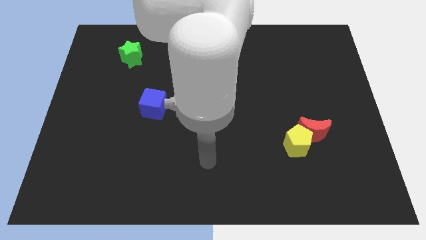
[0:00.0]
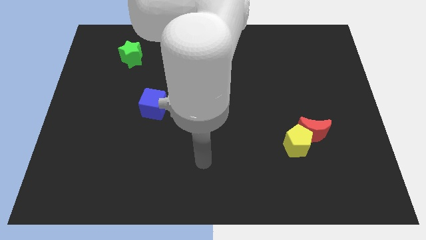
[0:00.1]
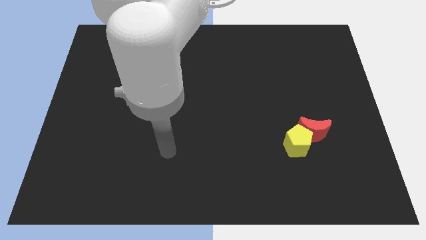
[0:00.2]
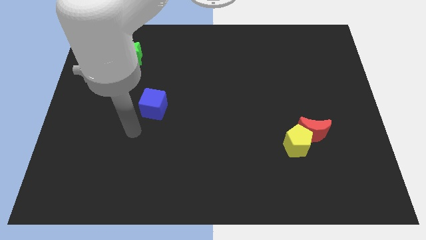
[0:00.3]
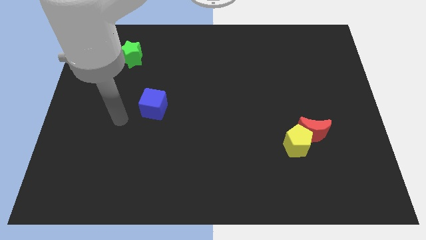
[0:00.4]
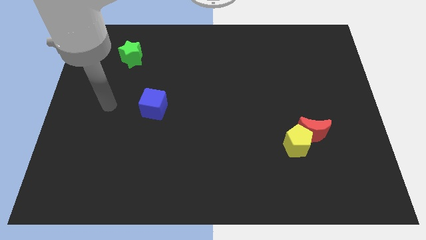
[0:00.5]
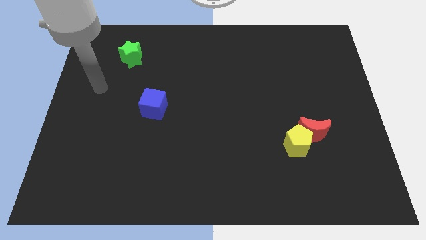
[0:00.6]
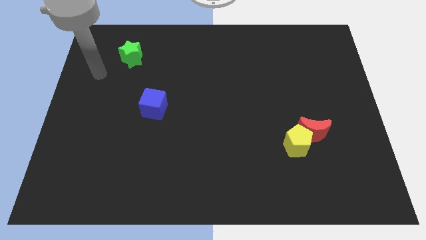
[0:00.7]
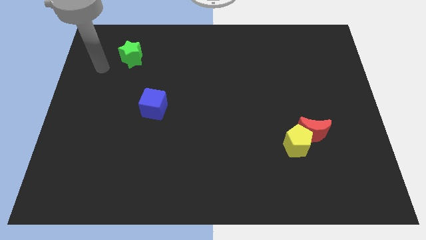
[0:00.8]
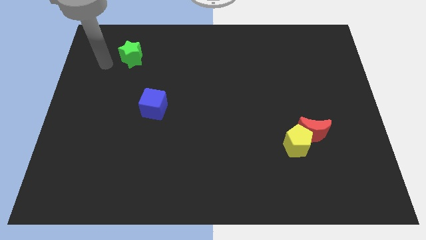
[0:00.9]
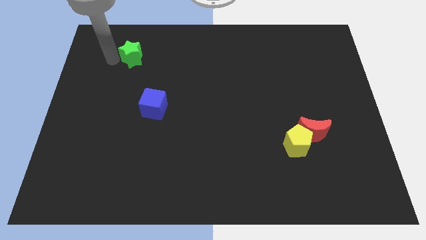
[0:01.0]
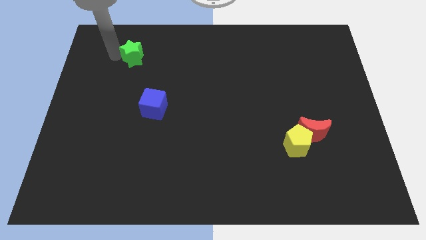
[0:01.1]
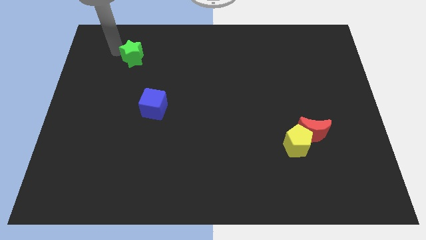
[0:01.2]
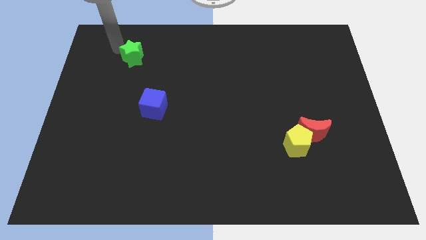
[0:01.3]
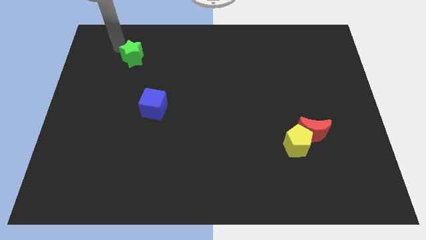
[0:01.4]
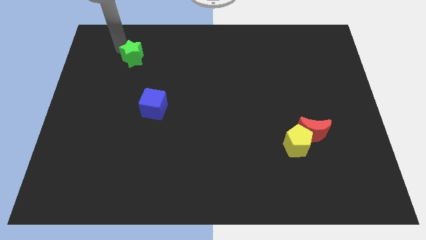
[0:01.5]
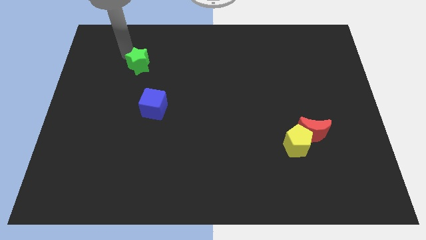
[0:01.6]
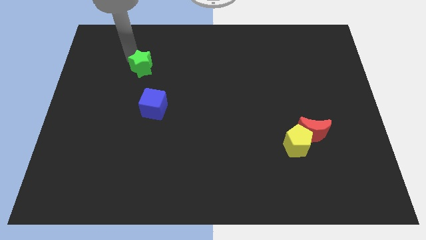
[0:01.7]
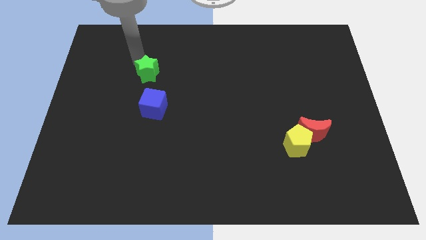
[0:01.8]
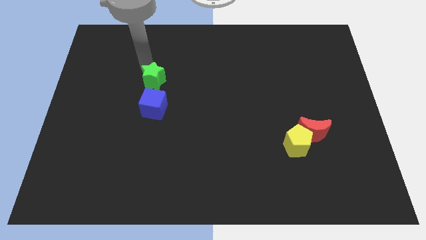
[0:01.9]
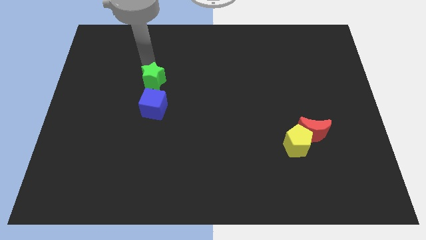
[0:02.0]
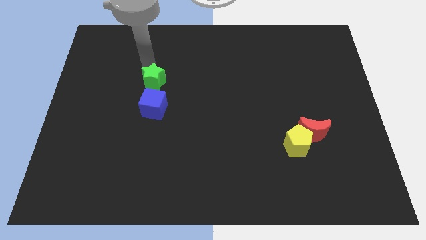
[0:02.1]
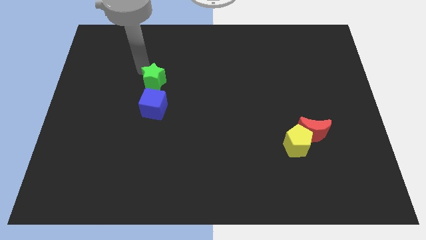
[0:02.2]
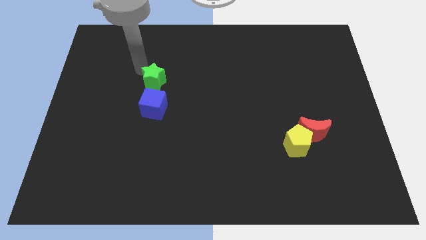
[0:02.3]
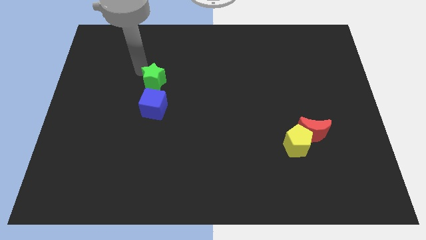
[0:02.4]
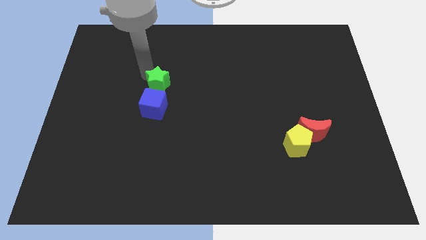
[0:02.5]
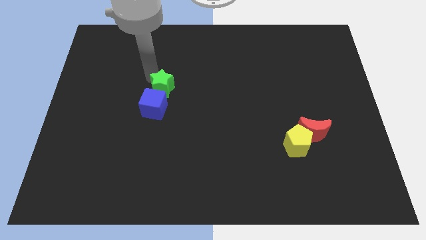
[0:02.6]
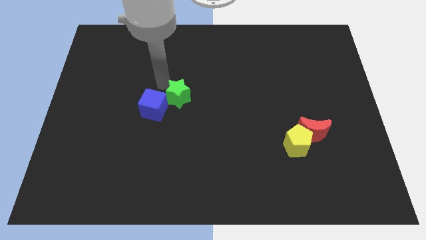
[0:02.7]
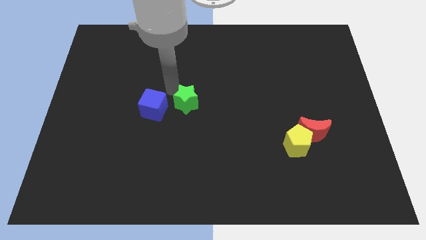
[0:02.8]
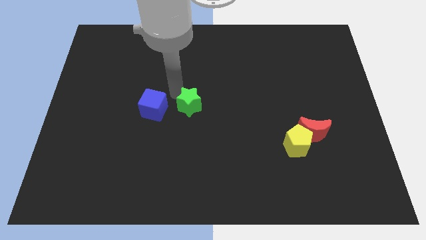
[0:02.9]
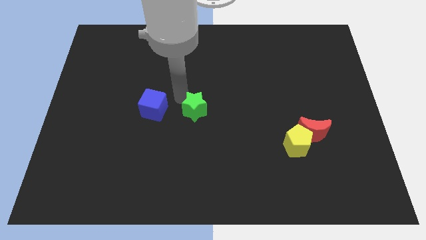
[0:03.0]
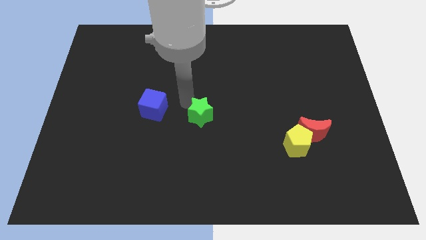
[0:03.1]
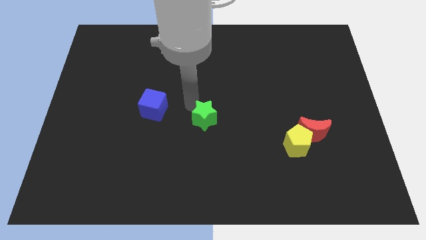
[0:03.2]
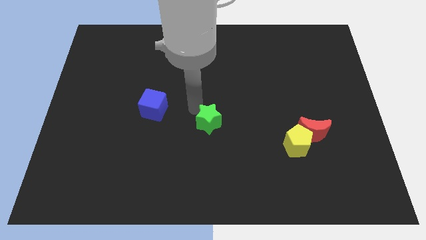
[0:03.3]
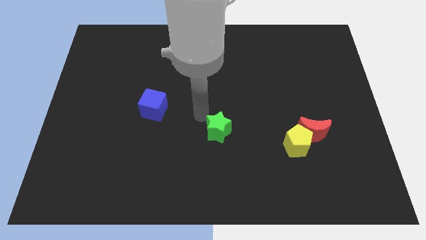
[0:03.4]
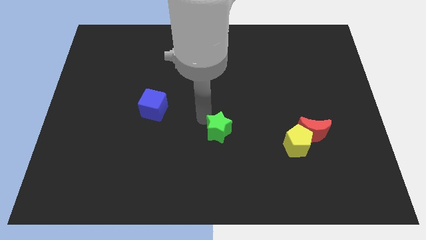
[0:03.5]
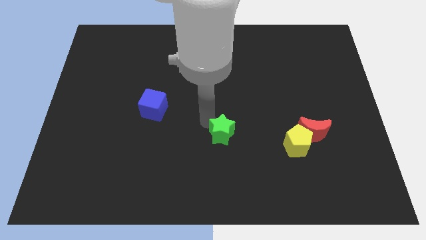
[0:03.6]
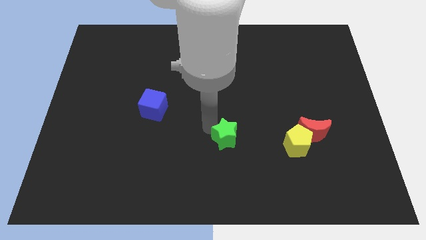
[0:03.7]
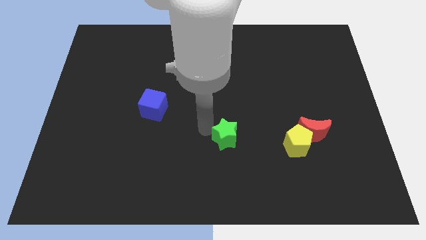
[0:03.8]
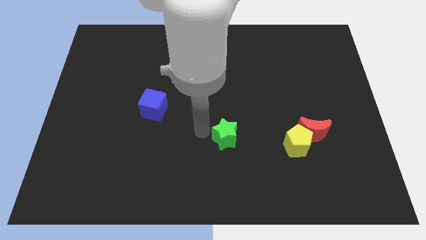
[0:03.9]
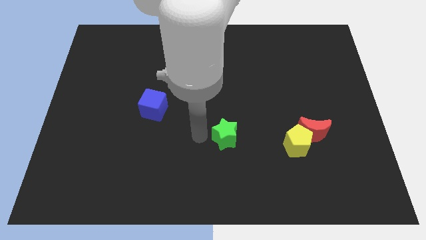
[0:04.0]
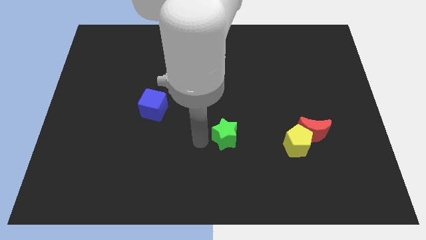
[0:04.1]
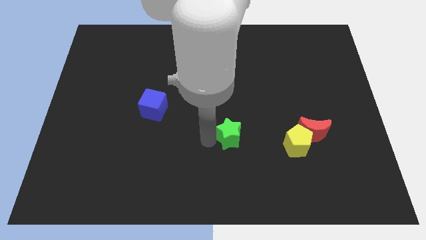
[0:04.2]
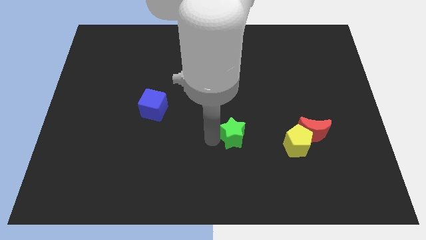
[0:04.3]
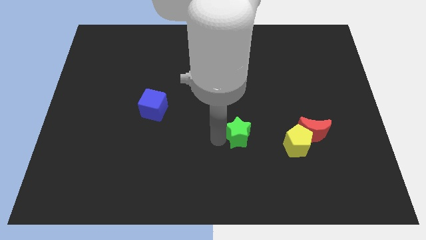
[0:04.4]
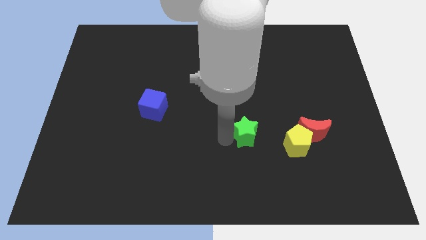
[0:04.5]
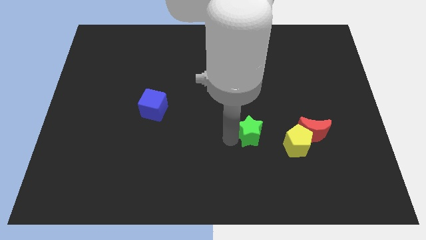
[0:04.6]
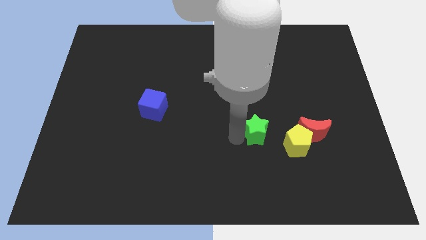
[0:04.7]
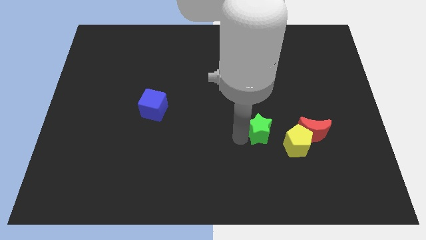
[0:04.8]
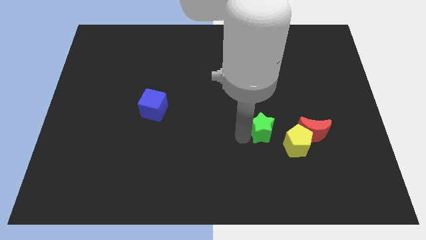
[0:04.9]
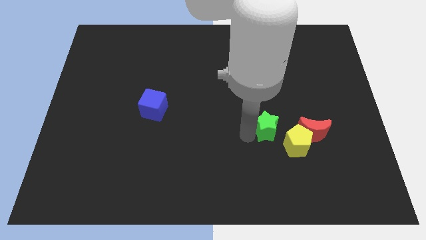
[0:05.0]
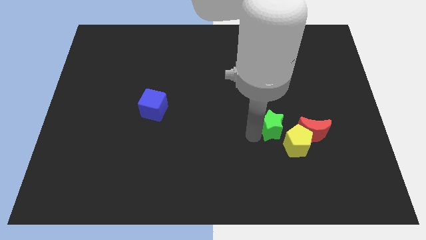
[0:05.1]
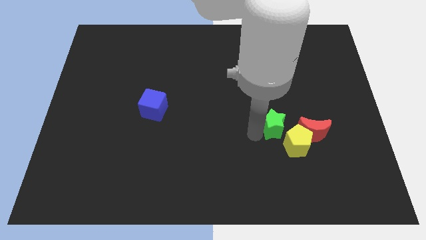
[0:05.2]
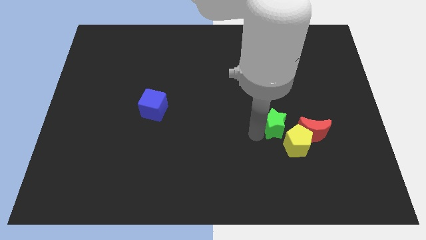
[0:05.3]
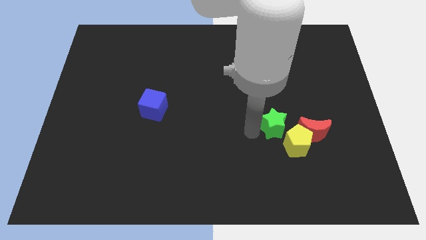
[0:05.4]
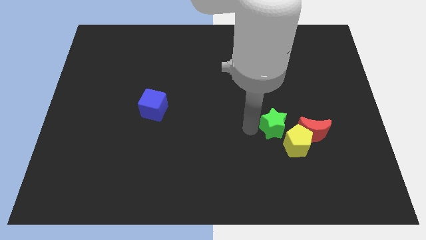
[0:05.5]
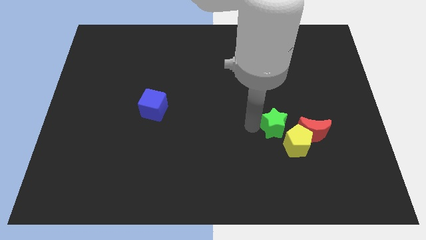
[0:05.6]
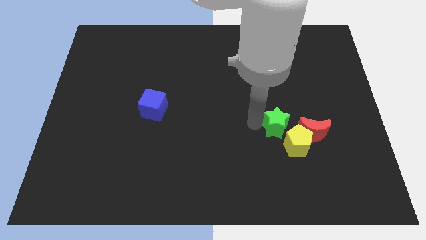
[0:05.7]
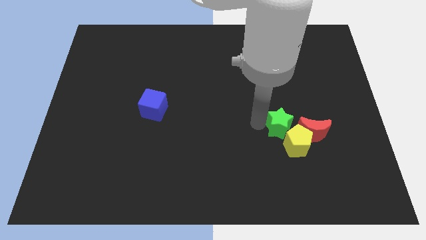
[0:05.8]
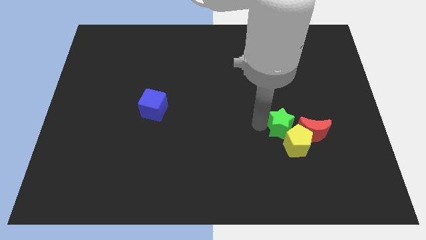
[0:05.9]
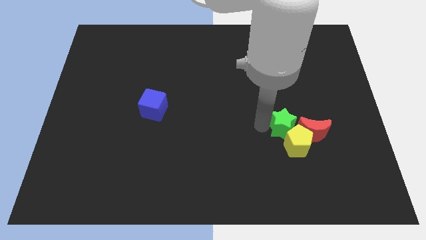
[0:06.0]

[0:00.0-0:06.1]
slide the green star to the yellow pentagon

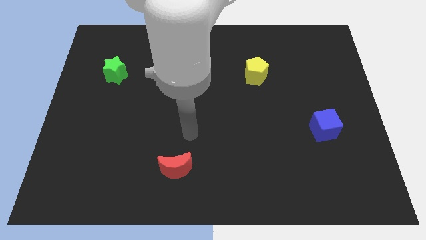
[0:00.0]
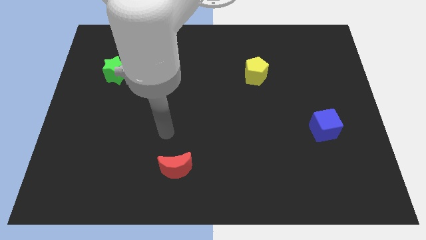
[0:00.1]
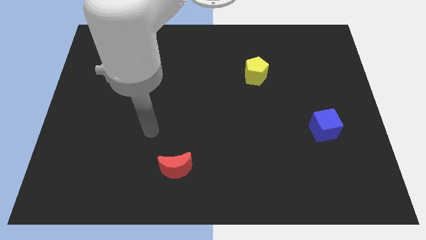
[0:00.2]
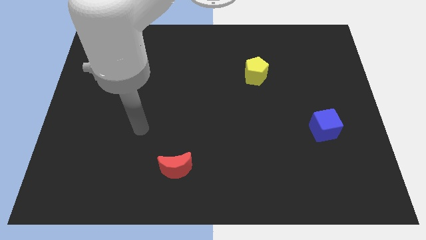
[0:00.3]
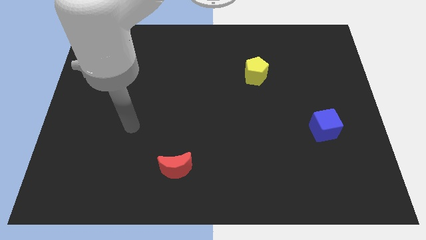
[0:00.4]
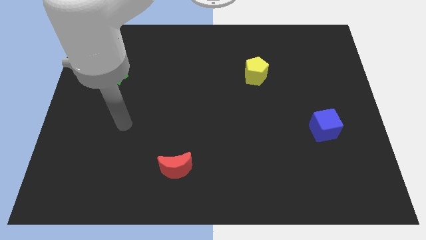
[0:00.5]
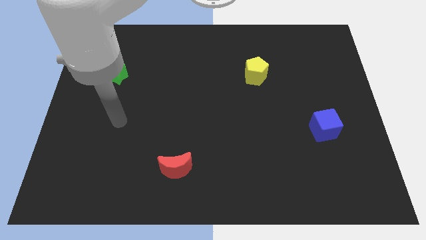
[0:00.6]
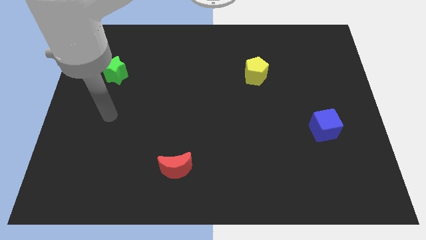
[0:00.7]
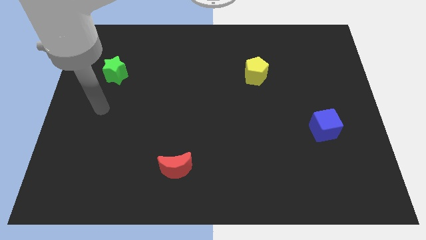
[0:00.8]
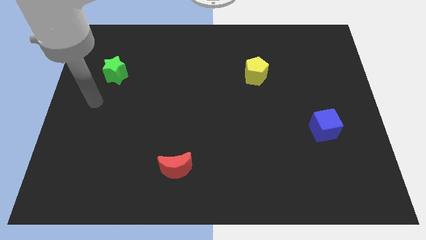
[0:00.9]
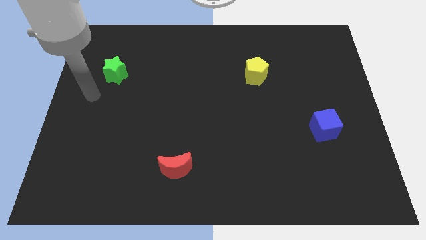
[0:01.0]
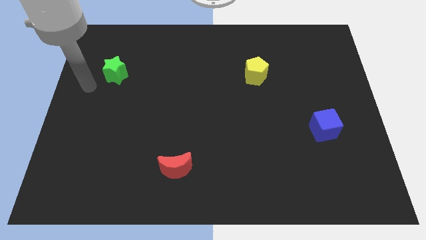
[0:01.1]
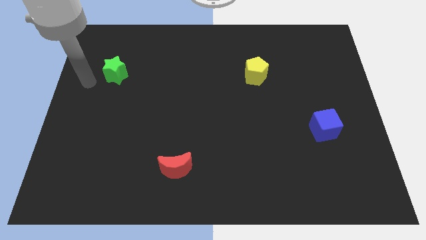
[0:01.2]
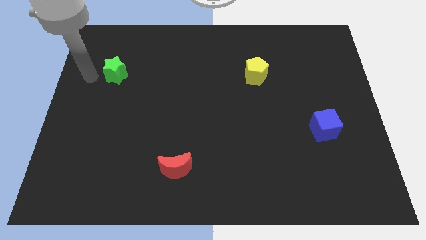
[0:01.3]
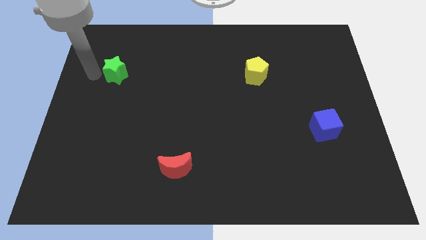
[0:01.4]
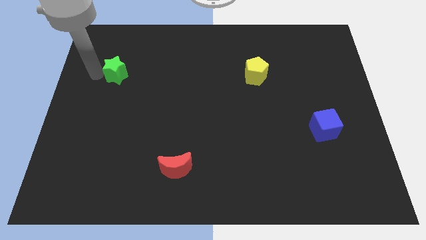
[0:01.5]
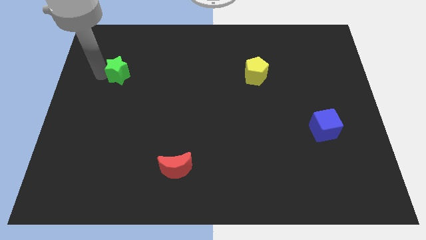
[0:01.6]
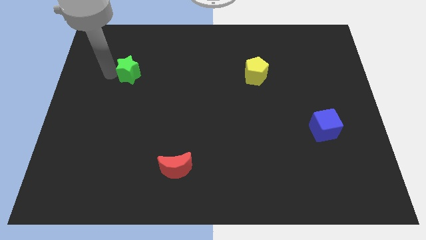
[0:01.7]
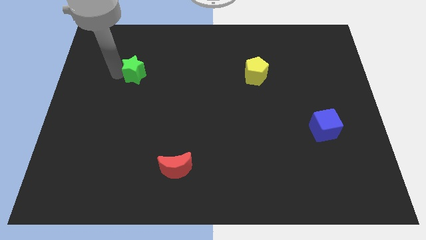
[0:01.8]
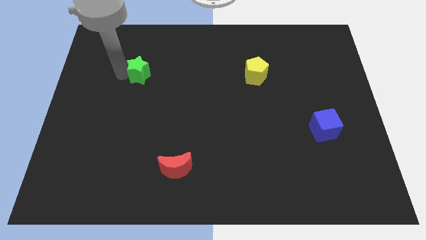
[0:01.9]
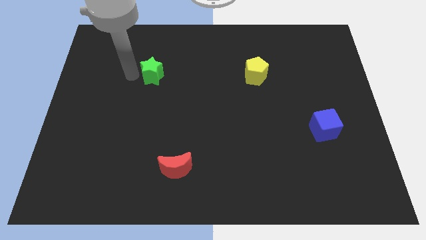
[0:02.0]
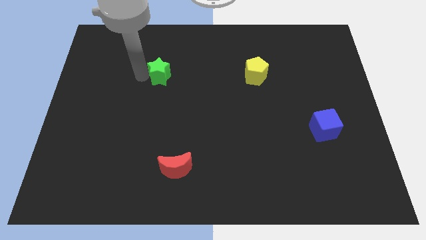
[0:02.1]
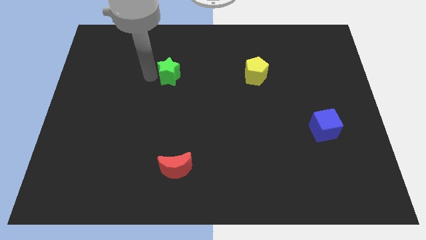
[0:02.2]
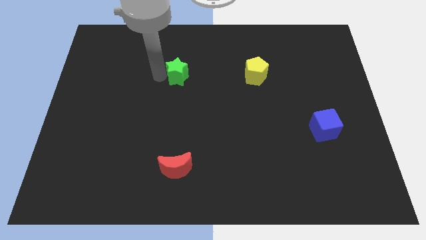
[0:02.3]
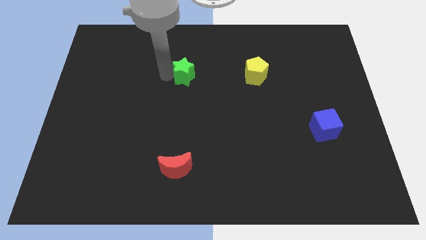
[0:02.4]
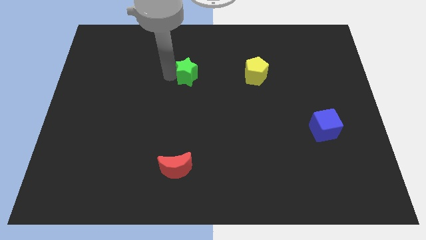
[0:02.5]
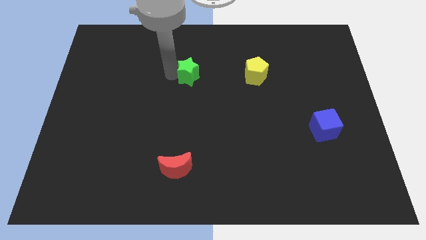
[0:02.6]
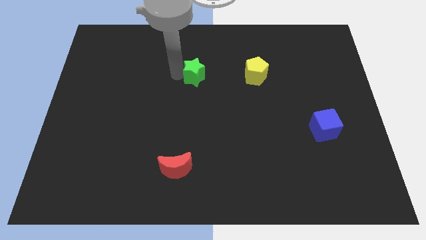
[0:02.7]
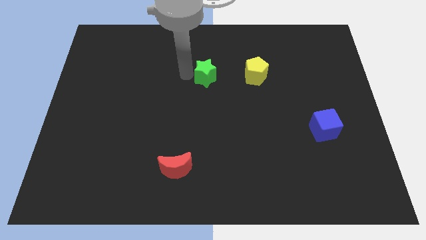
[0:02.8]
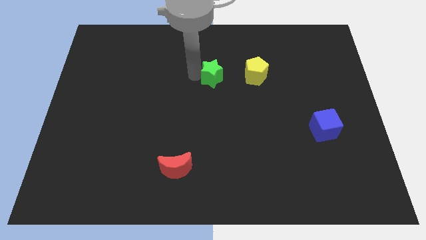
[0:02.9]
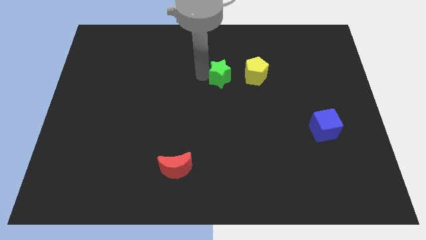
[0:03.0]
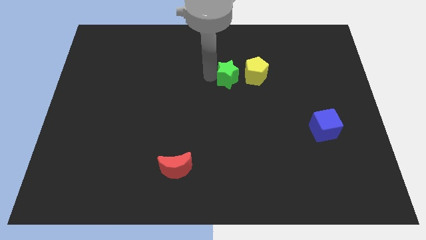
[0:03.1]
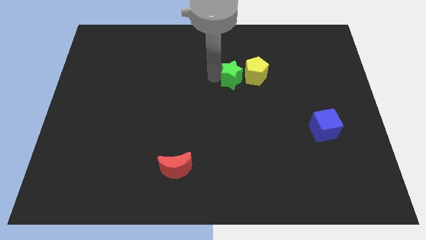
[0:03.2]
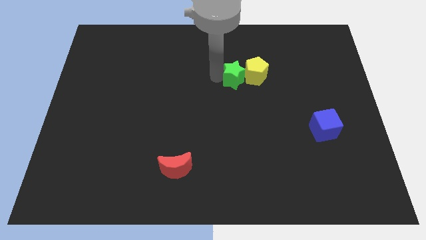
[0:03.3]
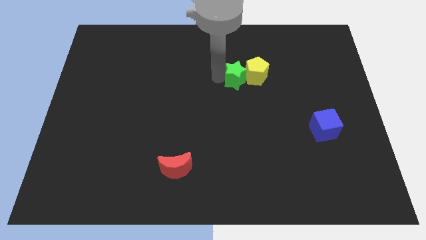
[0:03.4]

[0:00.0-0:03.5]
push the green star towards the yellow block
